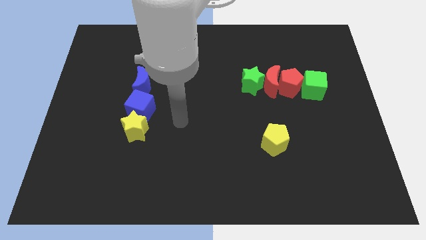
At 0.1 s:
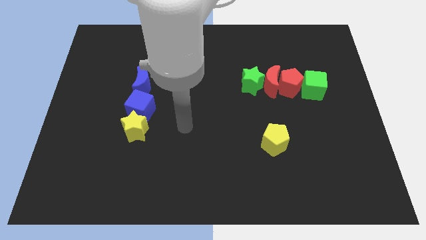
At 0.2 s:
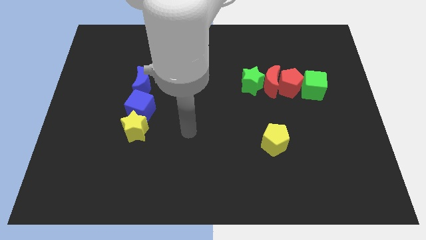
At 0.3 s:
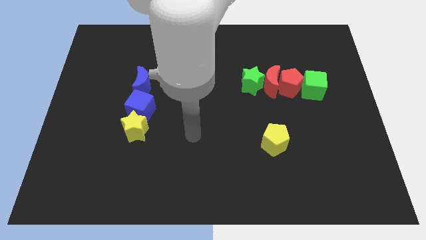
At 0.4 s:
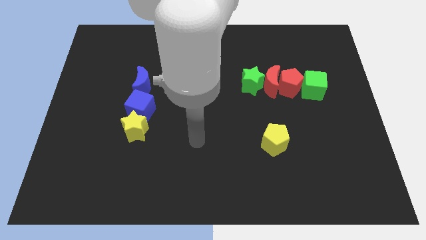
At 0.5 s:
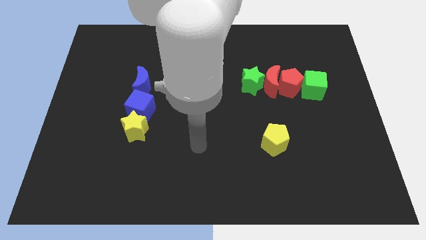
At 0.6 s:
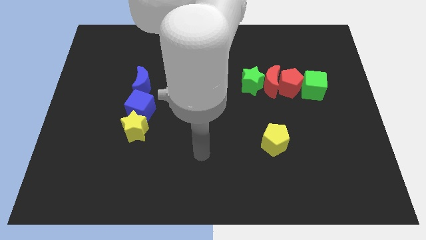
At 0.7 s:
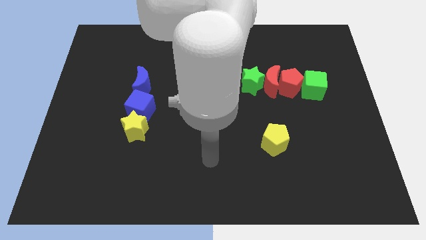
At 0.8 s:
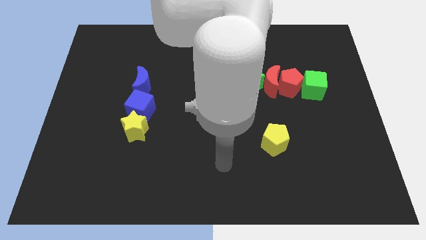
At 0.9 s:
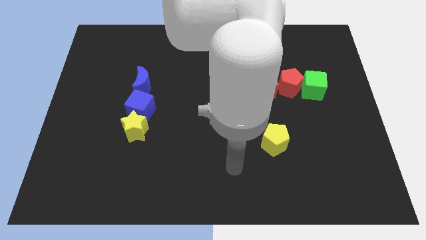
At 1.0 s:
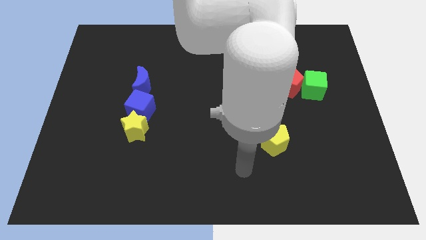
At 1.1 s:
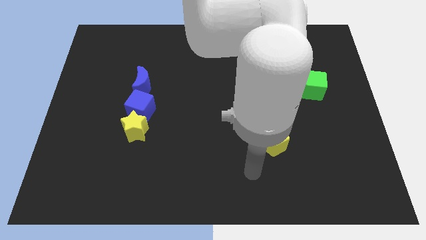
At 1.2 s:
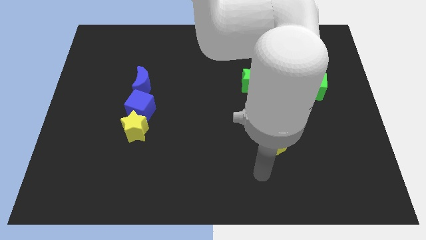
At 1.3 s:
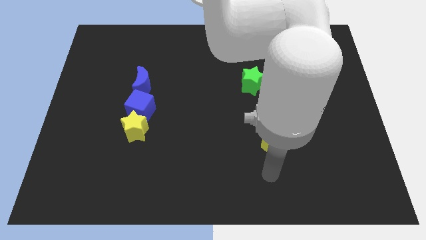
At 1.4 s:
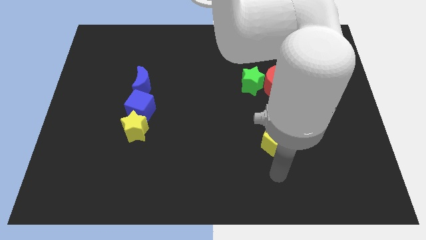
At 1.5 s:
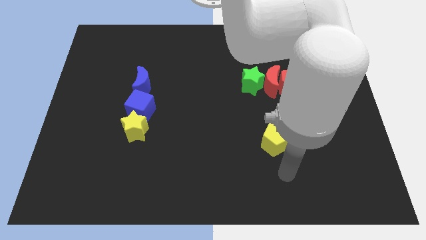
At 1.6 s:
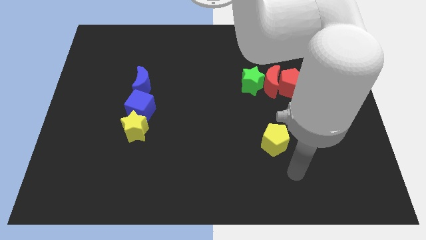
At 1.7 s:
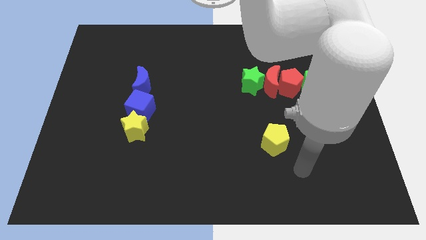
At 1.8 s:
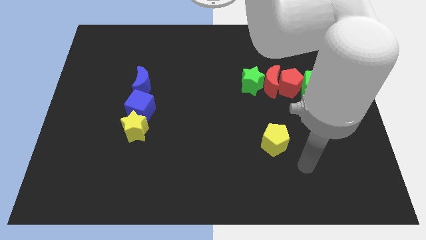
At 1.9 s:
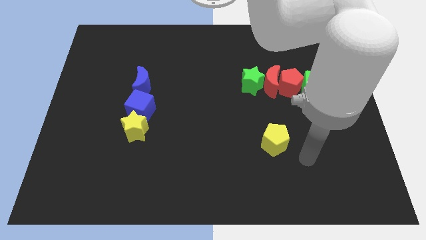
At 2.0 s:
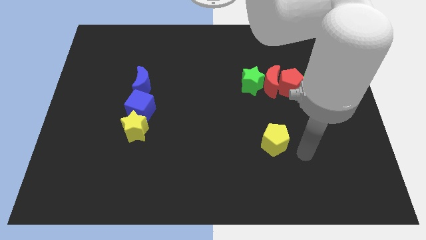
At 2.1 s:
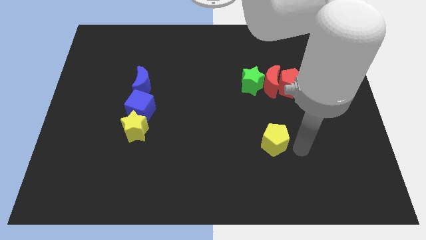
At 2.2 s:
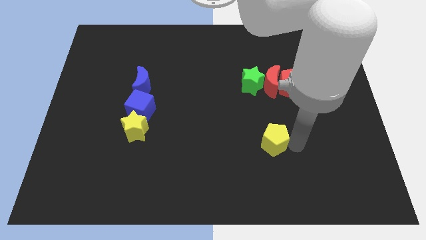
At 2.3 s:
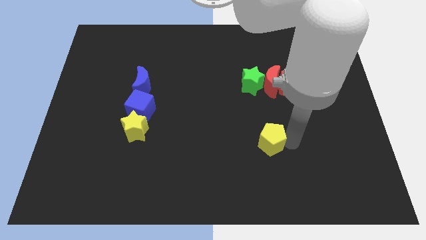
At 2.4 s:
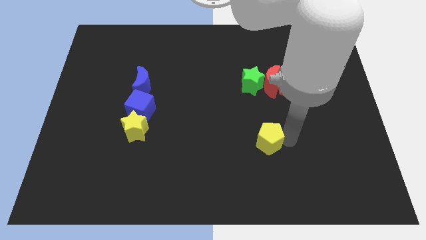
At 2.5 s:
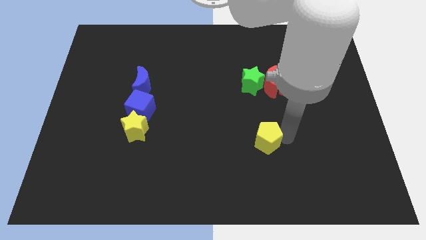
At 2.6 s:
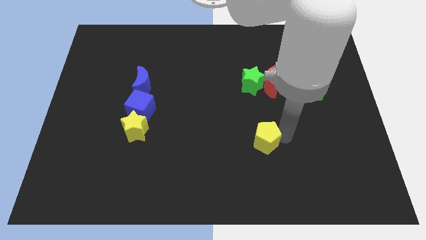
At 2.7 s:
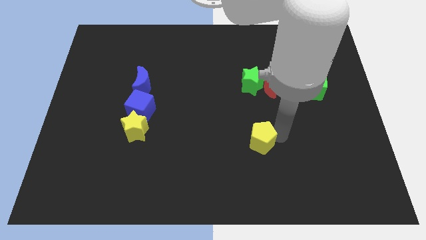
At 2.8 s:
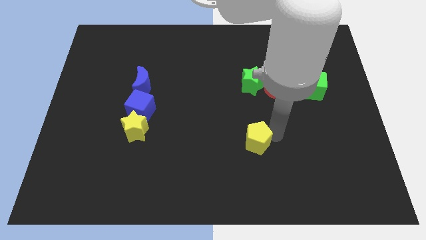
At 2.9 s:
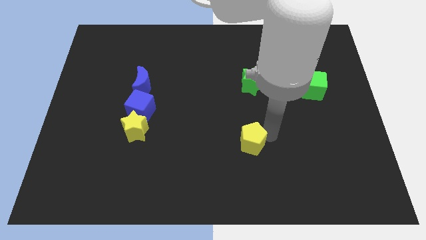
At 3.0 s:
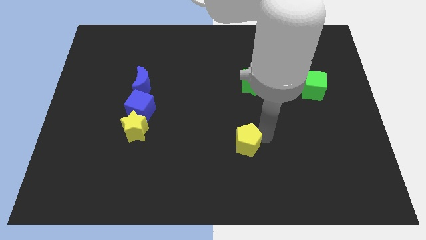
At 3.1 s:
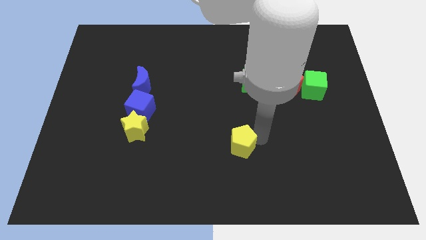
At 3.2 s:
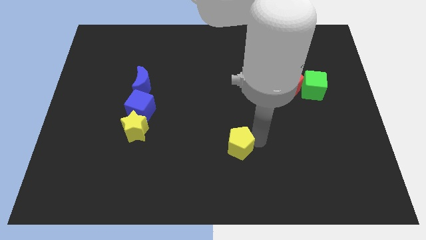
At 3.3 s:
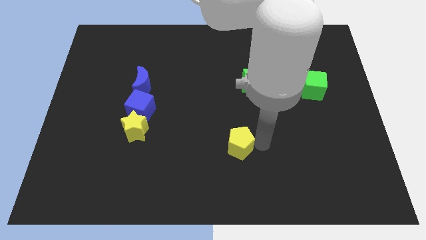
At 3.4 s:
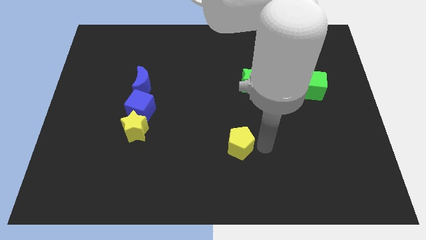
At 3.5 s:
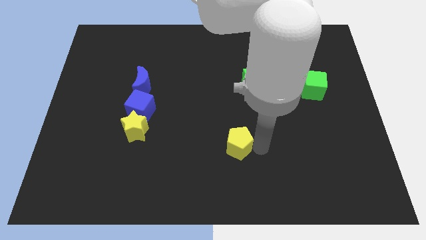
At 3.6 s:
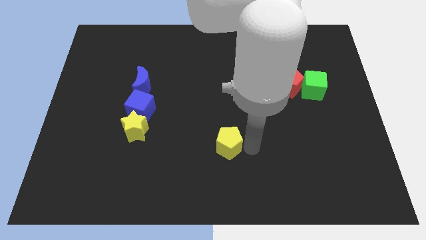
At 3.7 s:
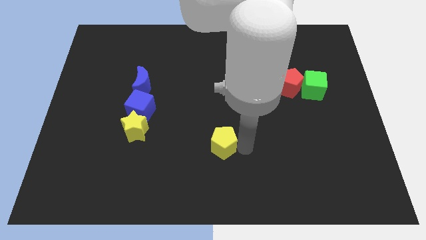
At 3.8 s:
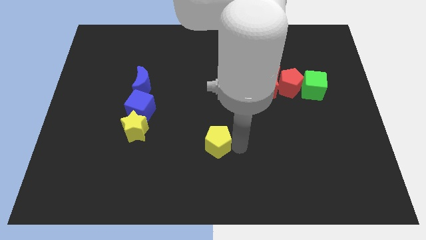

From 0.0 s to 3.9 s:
move yellow pentagon to the bottom center of the board

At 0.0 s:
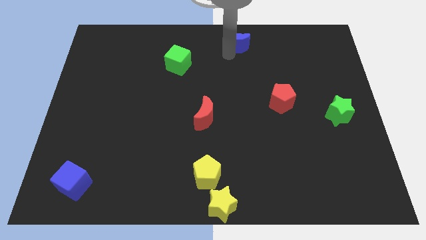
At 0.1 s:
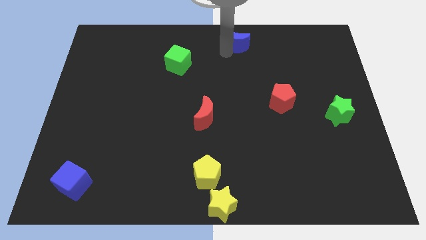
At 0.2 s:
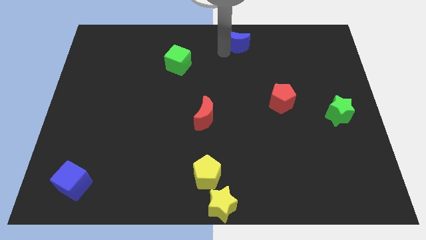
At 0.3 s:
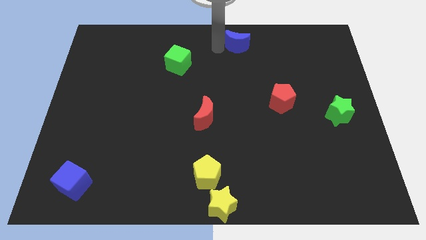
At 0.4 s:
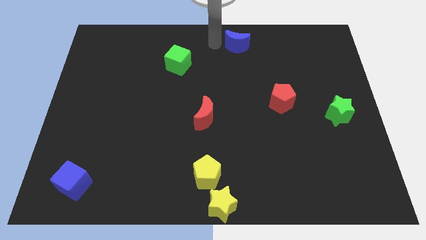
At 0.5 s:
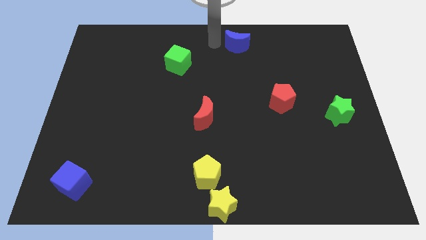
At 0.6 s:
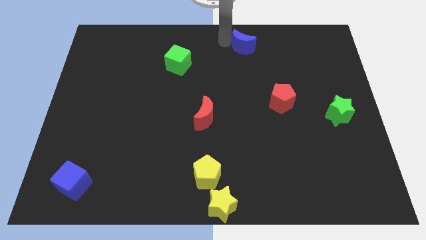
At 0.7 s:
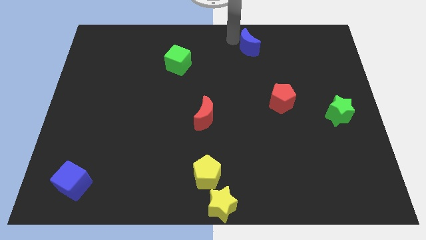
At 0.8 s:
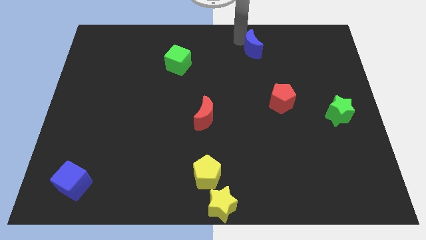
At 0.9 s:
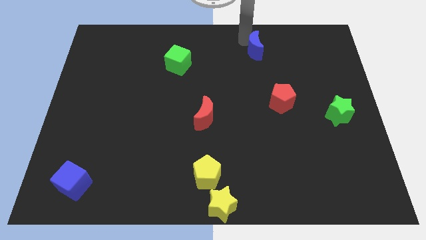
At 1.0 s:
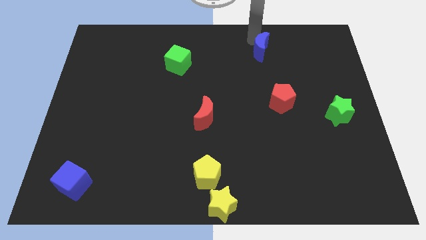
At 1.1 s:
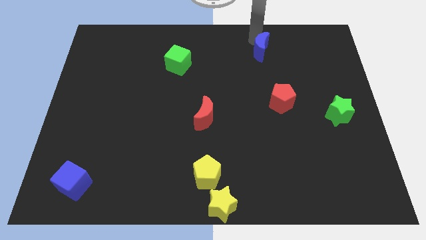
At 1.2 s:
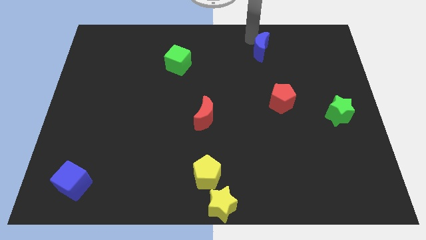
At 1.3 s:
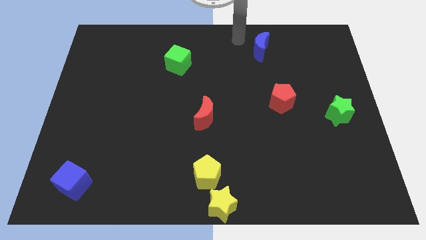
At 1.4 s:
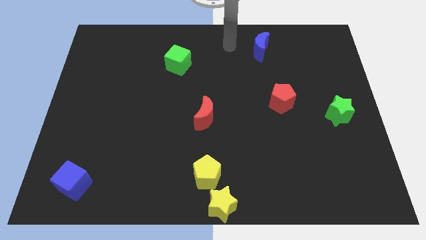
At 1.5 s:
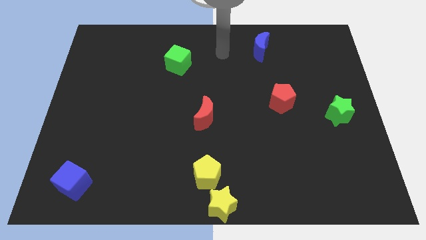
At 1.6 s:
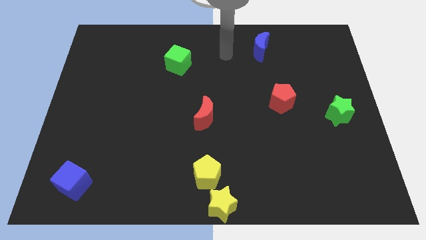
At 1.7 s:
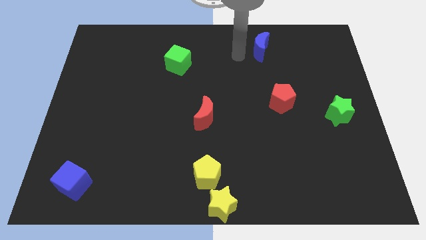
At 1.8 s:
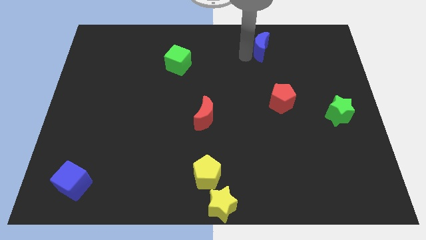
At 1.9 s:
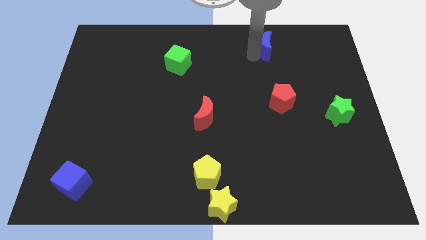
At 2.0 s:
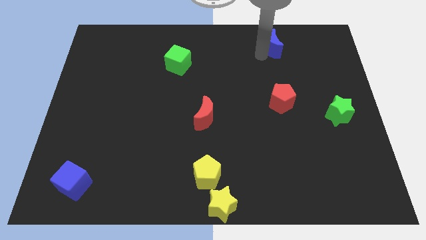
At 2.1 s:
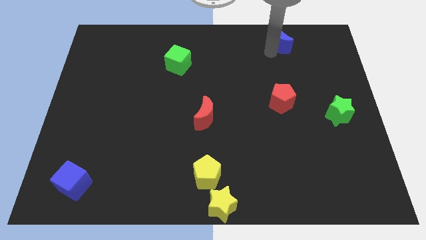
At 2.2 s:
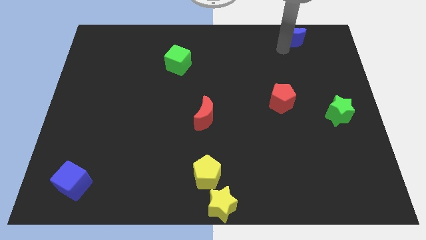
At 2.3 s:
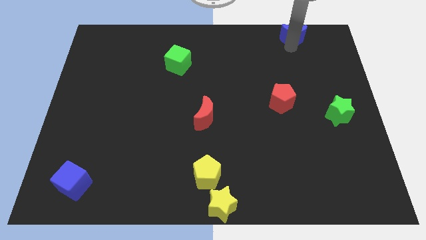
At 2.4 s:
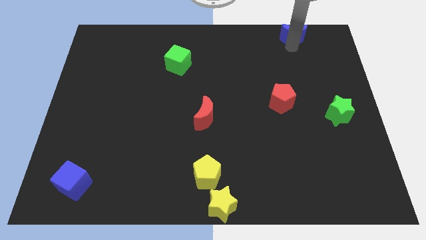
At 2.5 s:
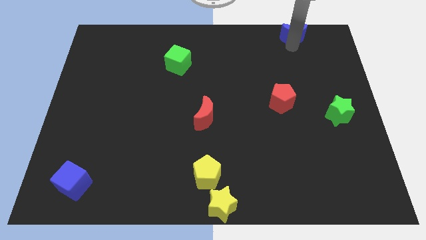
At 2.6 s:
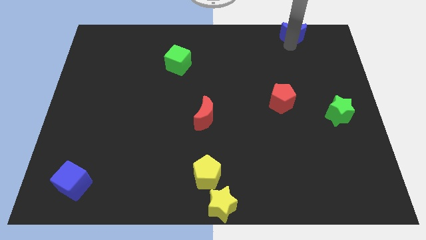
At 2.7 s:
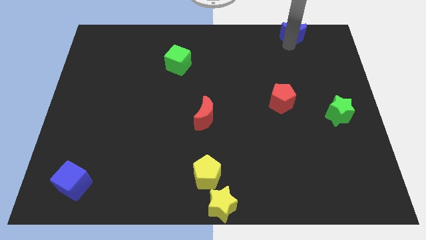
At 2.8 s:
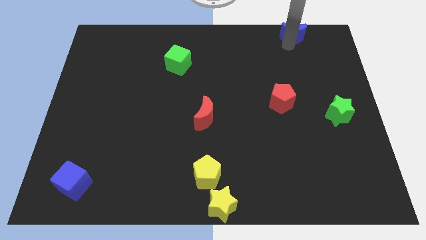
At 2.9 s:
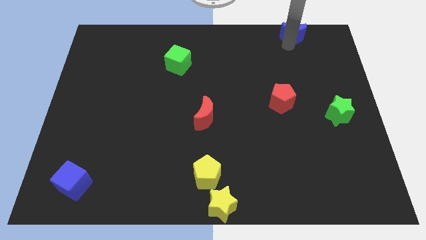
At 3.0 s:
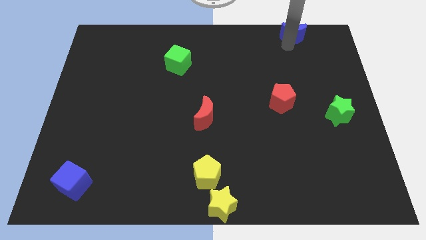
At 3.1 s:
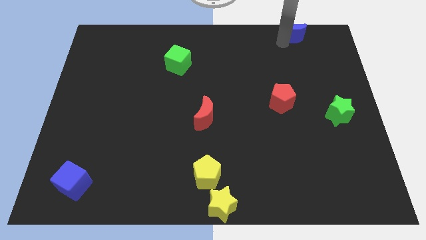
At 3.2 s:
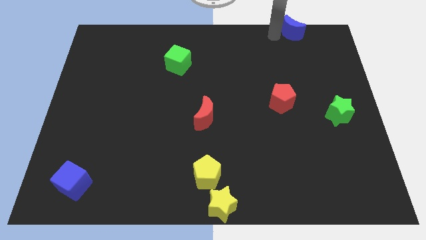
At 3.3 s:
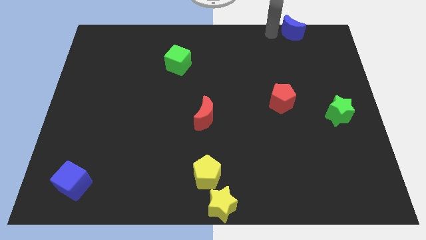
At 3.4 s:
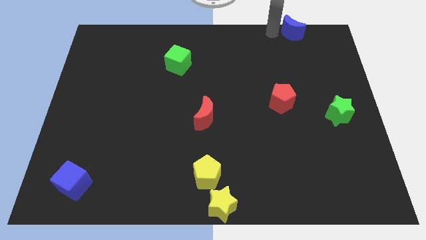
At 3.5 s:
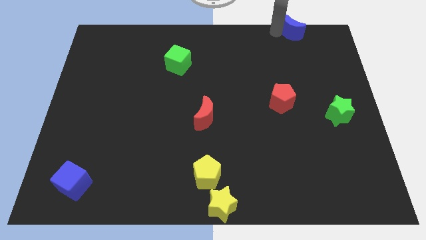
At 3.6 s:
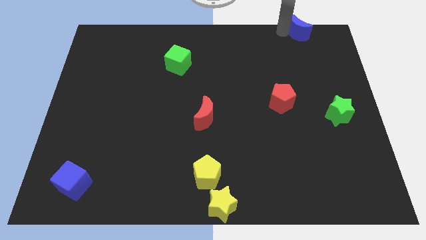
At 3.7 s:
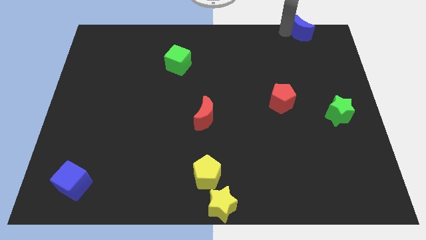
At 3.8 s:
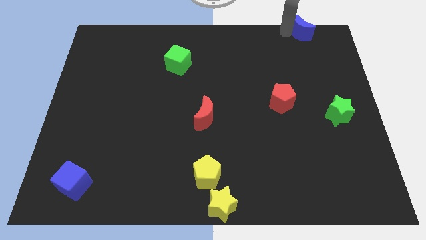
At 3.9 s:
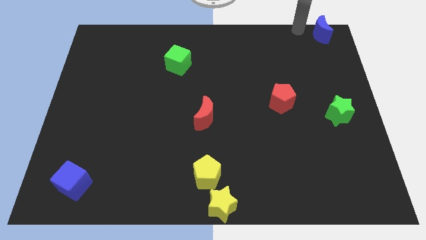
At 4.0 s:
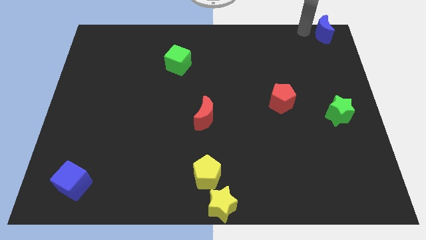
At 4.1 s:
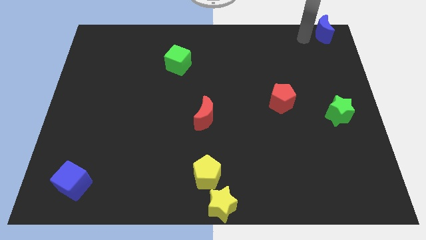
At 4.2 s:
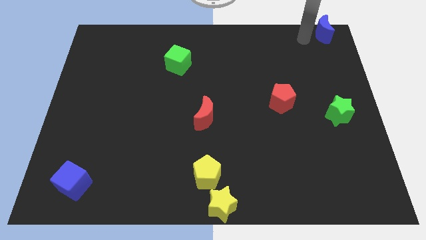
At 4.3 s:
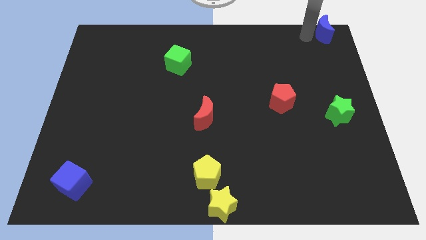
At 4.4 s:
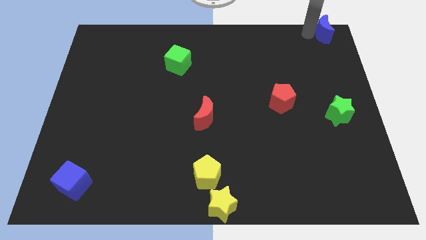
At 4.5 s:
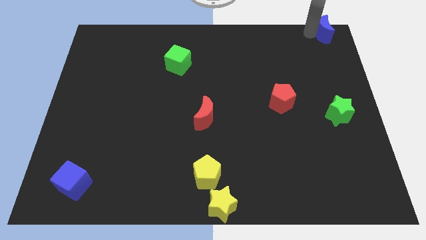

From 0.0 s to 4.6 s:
push the blue moon to the vertical top side of the green star

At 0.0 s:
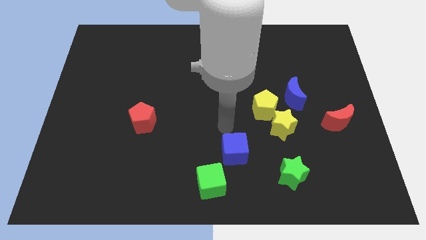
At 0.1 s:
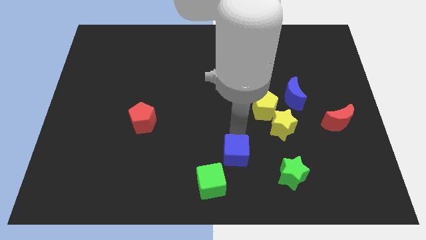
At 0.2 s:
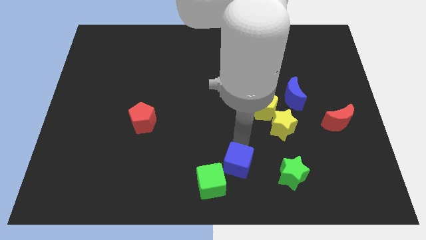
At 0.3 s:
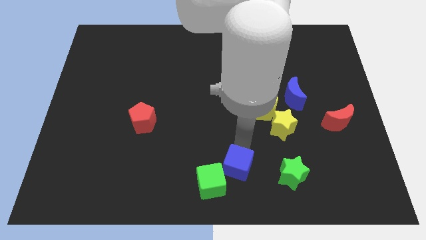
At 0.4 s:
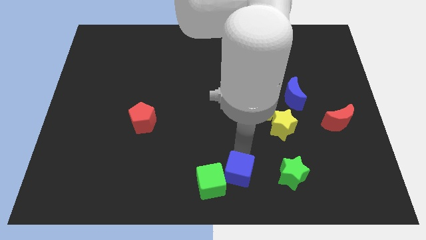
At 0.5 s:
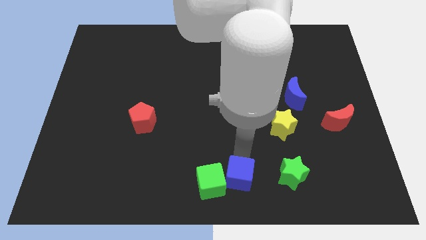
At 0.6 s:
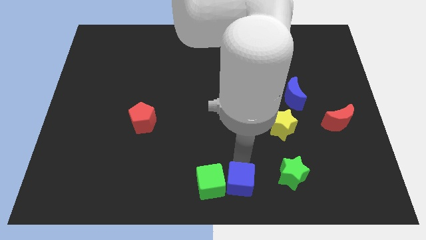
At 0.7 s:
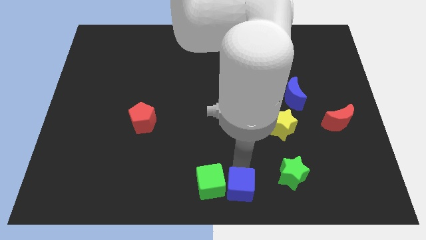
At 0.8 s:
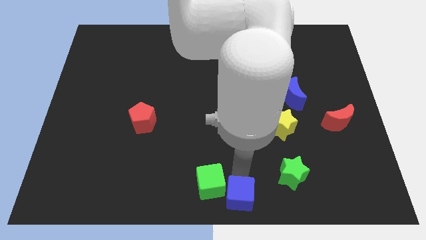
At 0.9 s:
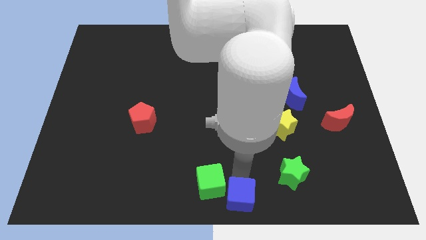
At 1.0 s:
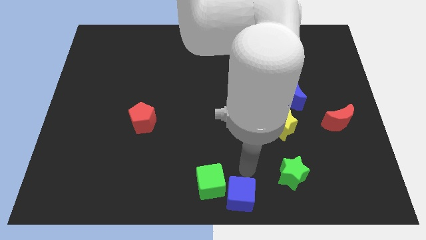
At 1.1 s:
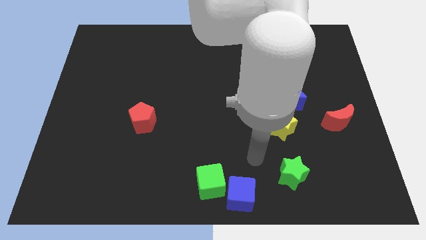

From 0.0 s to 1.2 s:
push the blue cube to the bottom center of the board
